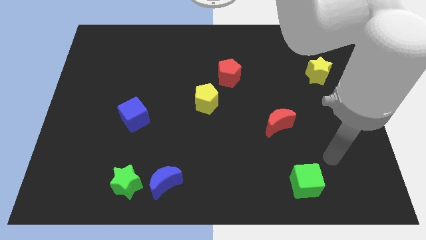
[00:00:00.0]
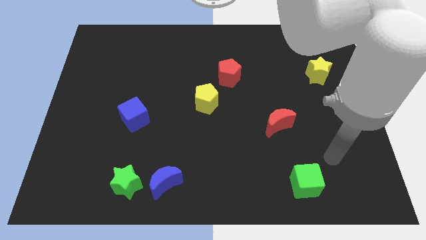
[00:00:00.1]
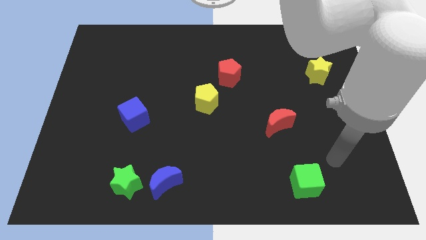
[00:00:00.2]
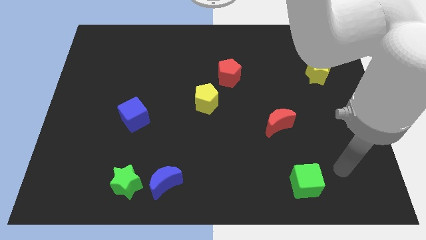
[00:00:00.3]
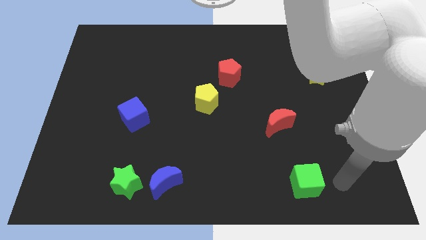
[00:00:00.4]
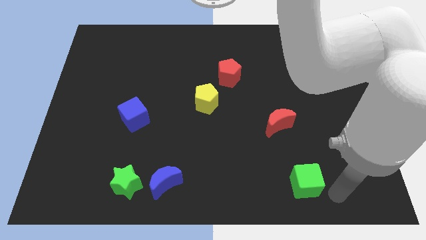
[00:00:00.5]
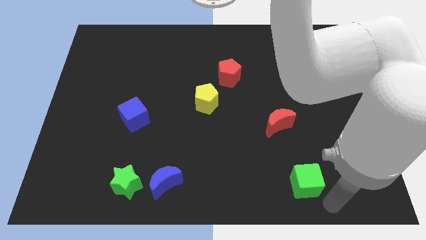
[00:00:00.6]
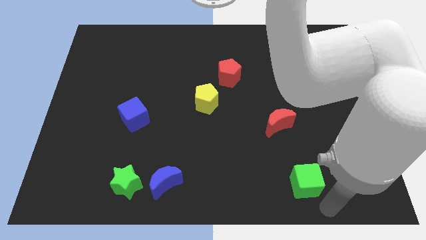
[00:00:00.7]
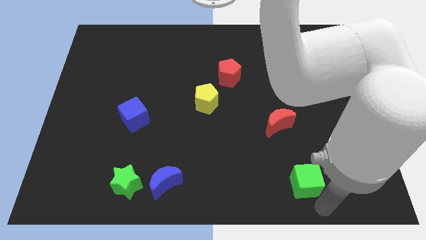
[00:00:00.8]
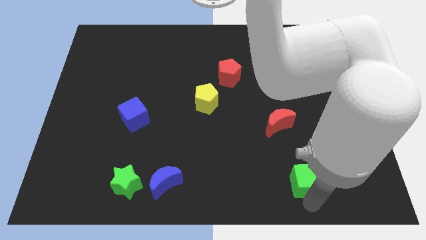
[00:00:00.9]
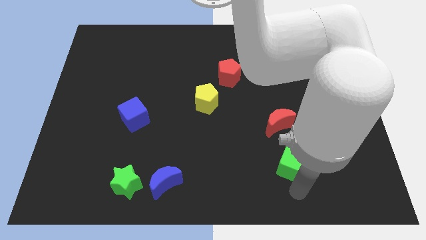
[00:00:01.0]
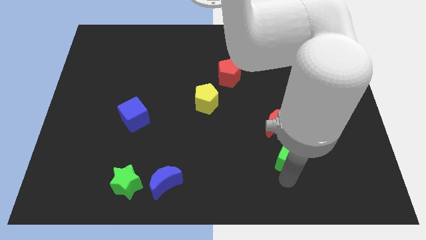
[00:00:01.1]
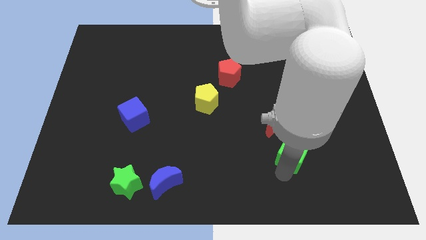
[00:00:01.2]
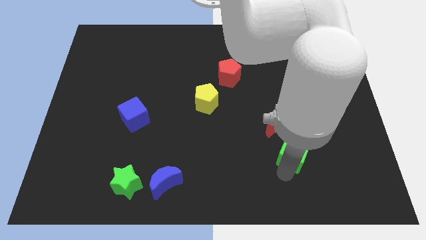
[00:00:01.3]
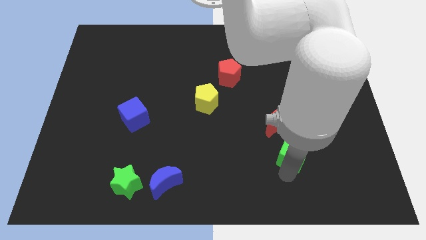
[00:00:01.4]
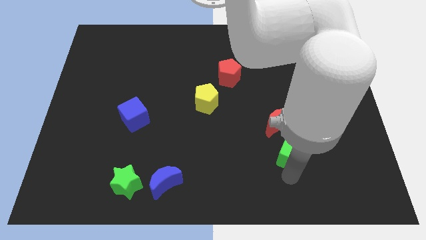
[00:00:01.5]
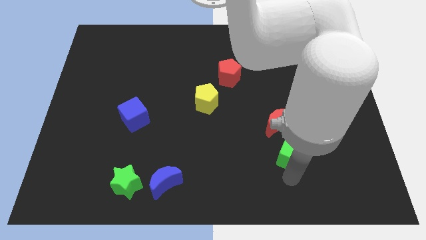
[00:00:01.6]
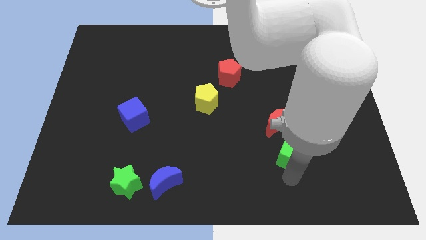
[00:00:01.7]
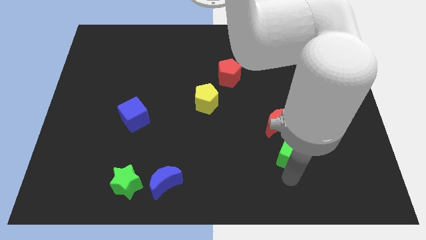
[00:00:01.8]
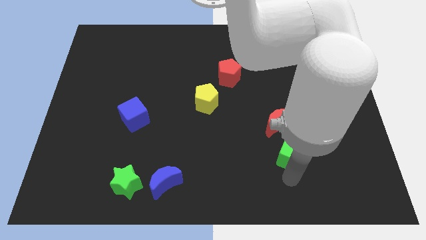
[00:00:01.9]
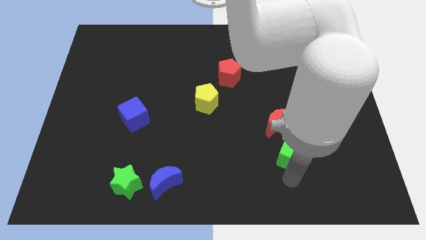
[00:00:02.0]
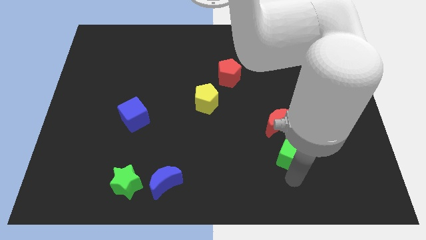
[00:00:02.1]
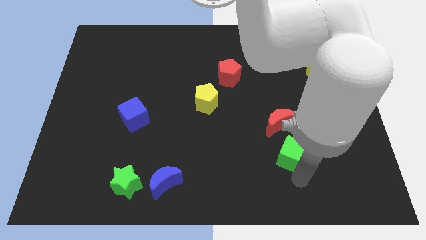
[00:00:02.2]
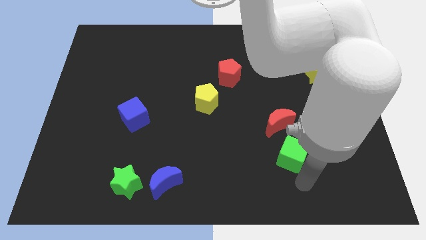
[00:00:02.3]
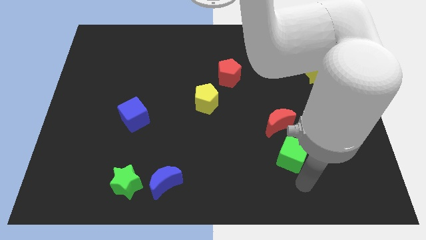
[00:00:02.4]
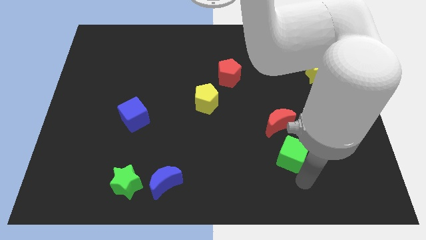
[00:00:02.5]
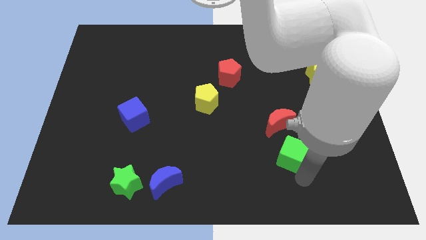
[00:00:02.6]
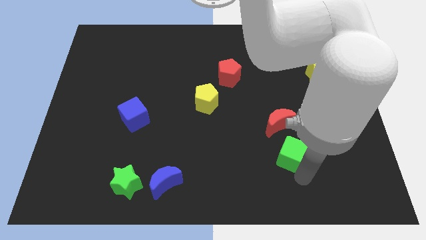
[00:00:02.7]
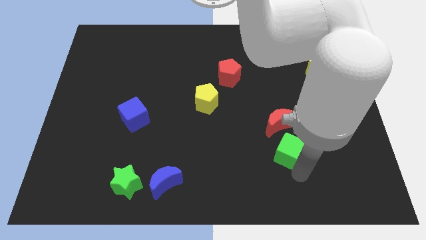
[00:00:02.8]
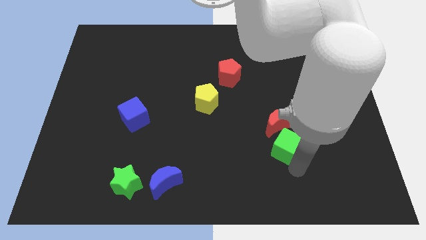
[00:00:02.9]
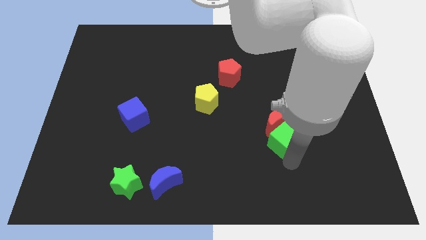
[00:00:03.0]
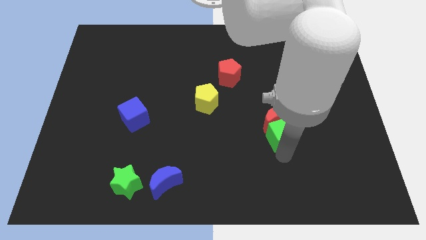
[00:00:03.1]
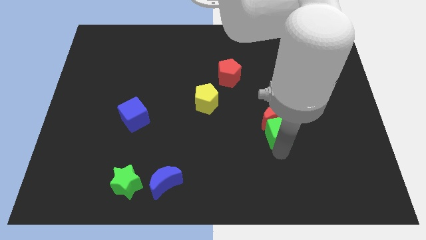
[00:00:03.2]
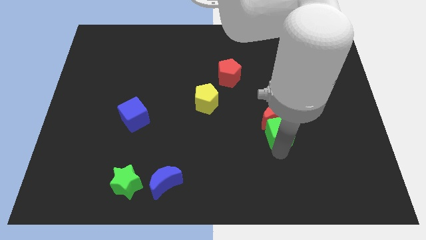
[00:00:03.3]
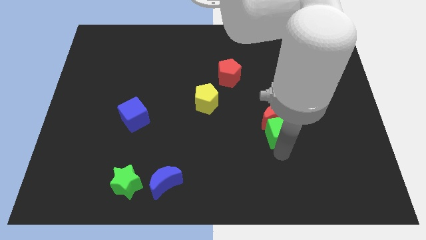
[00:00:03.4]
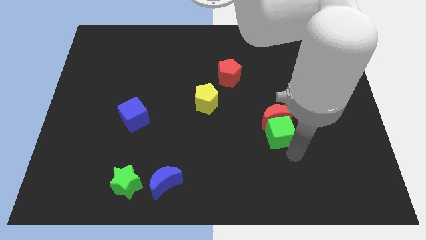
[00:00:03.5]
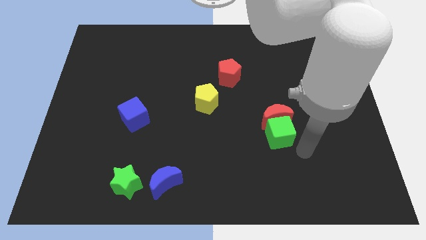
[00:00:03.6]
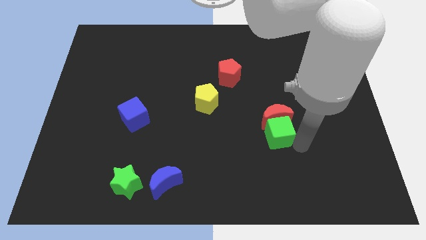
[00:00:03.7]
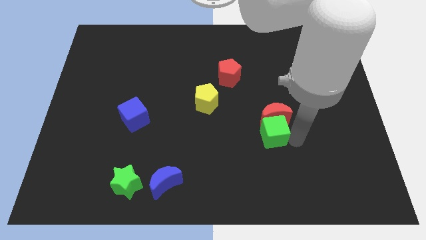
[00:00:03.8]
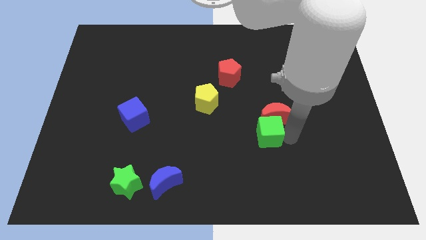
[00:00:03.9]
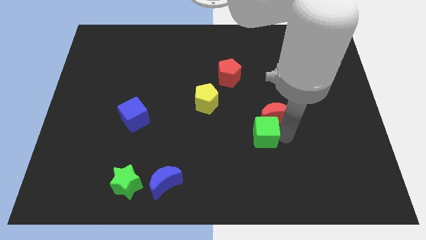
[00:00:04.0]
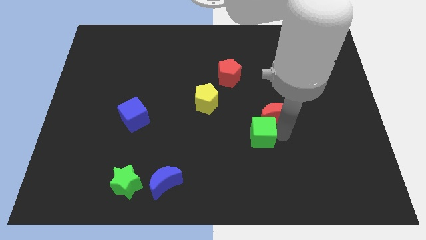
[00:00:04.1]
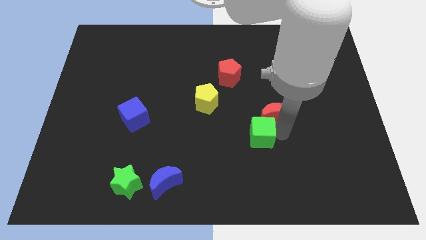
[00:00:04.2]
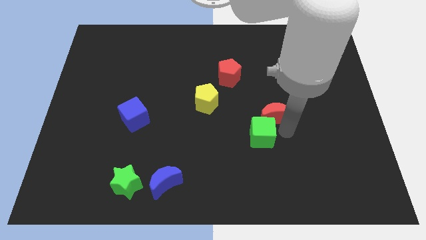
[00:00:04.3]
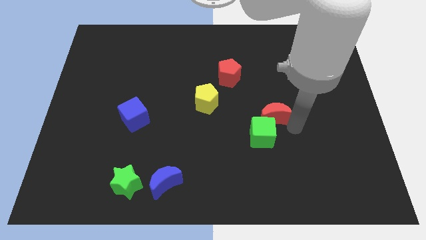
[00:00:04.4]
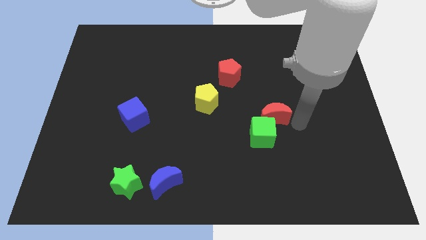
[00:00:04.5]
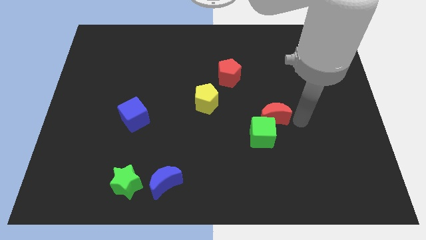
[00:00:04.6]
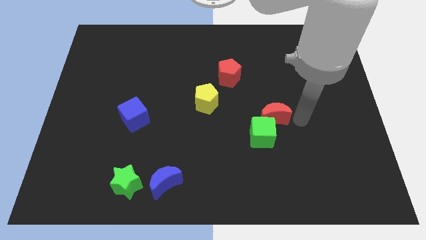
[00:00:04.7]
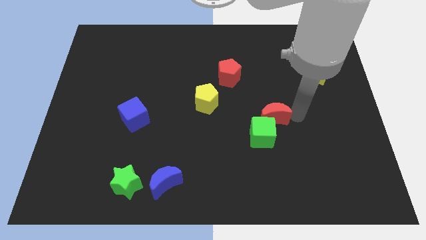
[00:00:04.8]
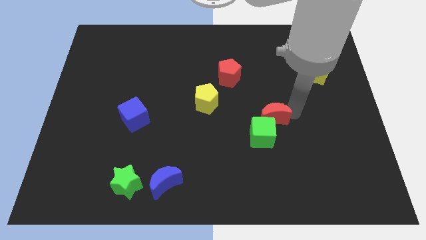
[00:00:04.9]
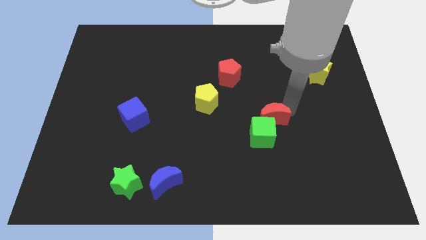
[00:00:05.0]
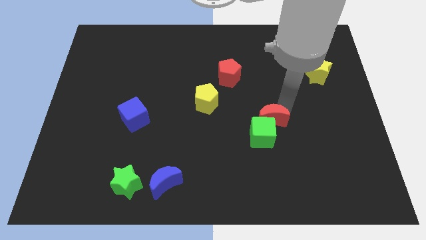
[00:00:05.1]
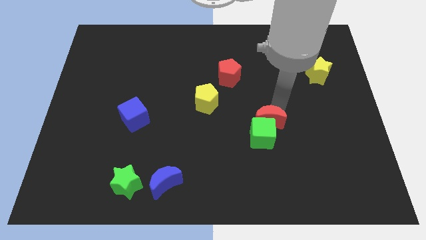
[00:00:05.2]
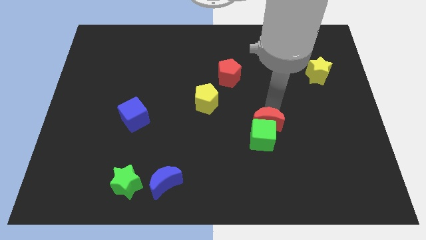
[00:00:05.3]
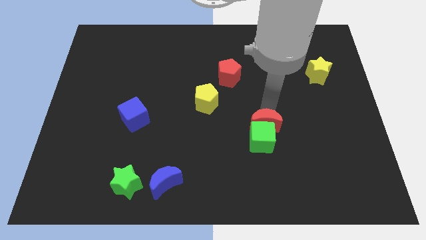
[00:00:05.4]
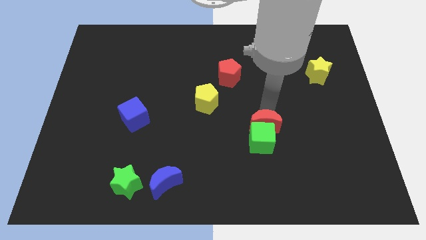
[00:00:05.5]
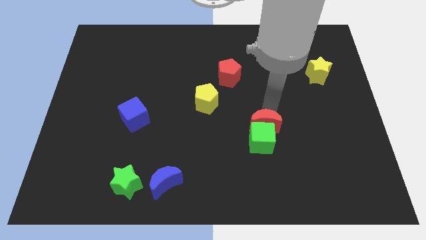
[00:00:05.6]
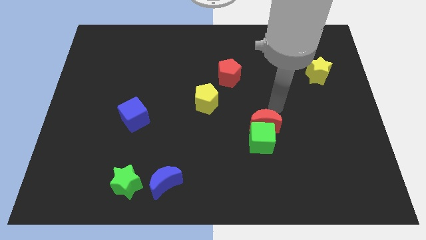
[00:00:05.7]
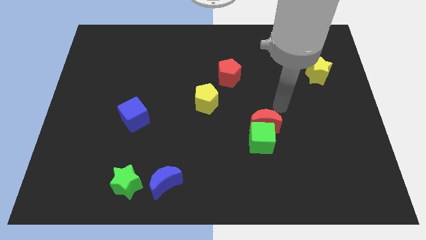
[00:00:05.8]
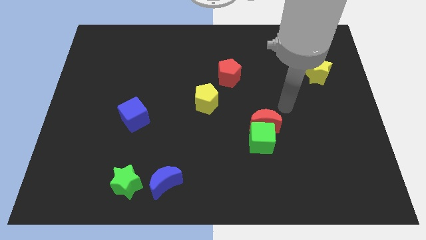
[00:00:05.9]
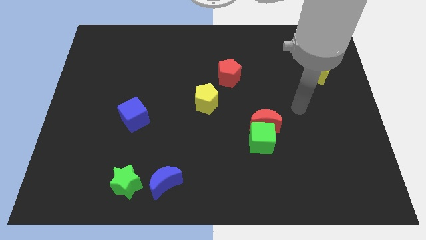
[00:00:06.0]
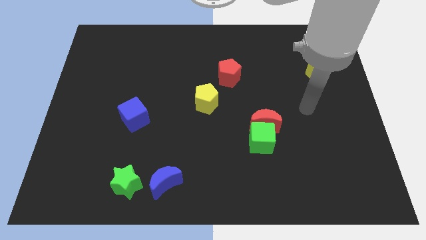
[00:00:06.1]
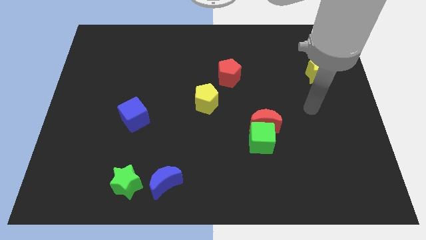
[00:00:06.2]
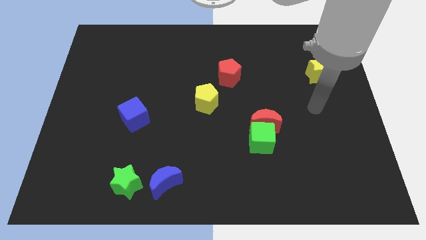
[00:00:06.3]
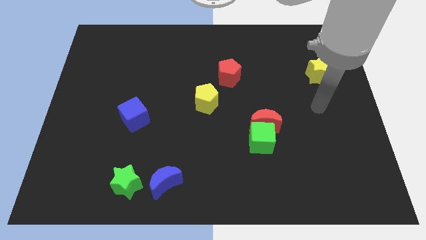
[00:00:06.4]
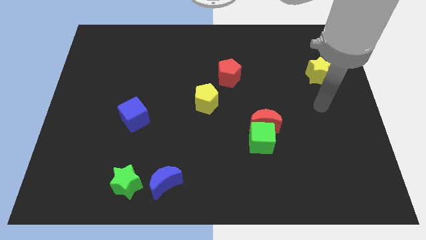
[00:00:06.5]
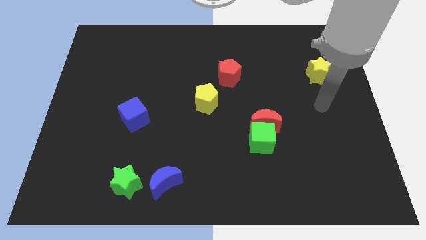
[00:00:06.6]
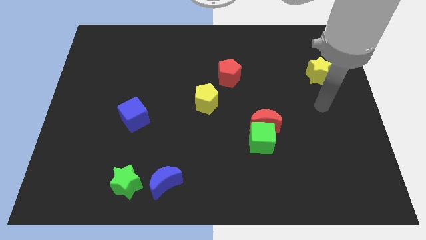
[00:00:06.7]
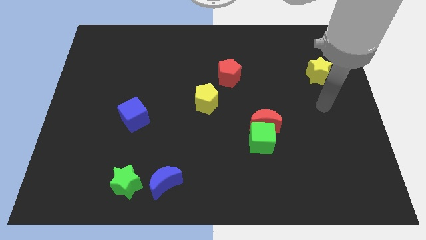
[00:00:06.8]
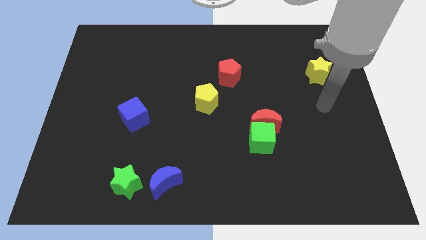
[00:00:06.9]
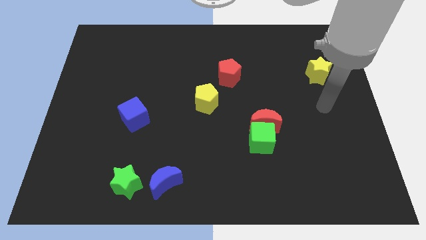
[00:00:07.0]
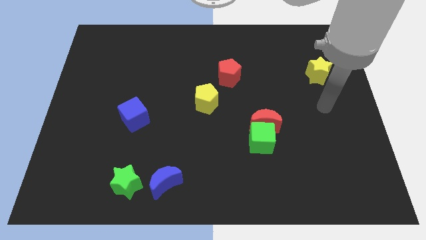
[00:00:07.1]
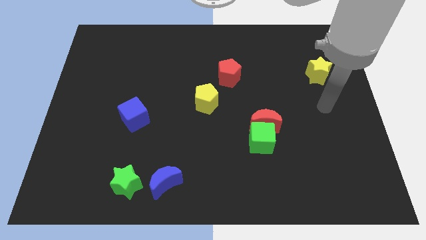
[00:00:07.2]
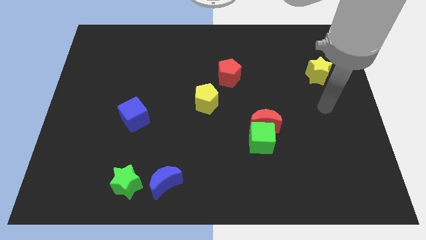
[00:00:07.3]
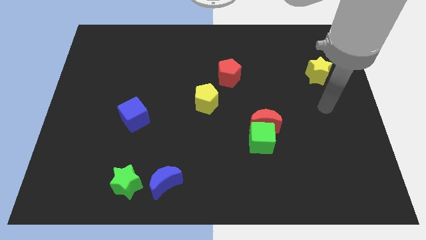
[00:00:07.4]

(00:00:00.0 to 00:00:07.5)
move the green cube above the red moon

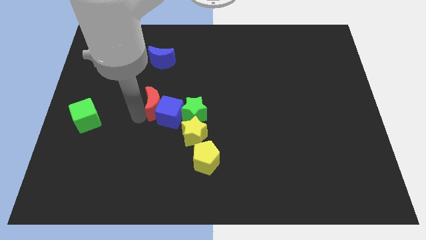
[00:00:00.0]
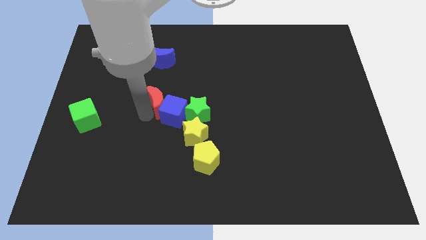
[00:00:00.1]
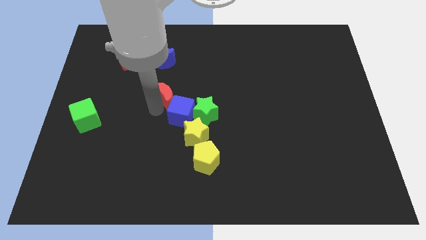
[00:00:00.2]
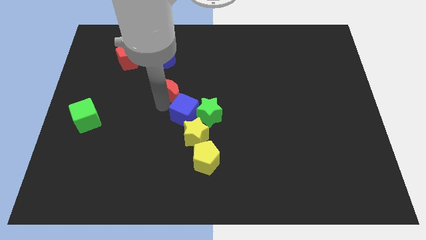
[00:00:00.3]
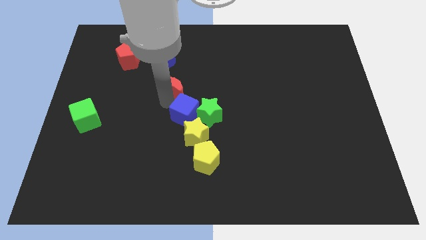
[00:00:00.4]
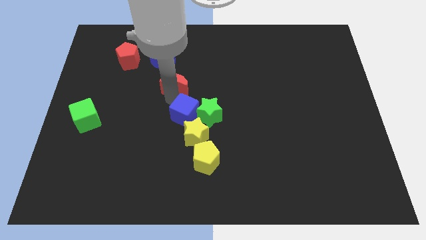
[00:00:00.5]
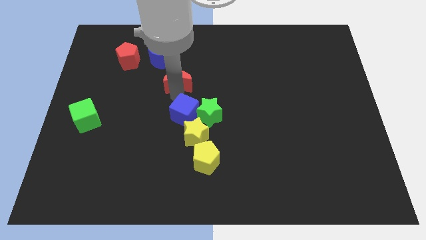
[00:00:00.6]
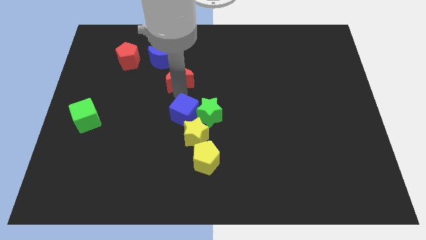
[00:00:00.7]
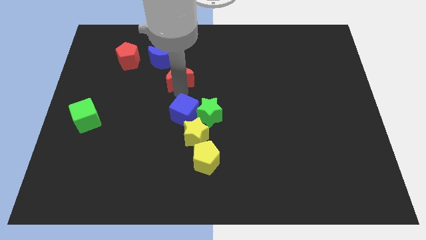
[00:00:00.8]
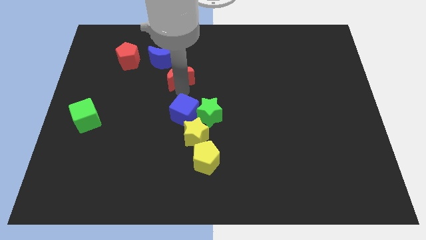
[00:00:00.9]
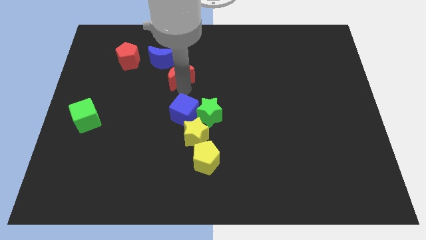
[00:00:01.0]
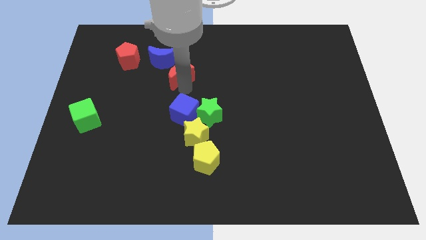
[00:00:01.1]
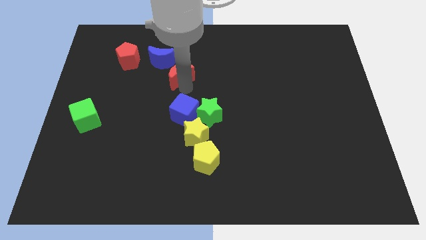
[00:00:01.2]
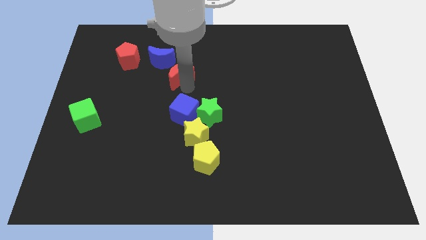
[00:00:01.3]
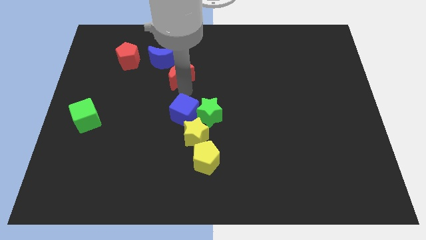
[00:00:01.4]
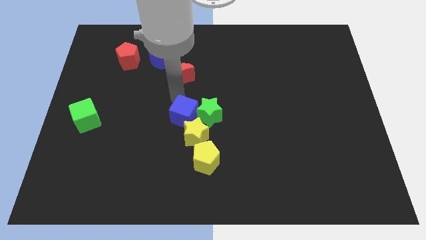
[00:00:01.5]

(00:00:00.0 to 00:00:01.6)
move the red moon to the top side of the blue cube

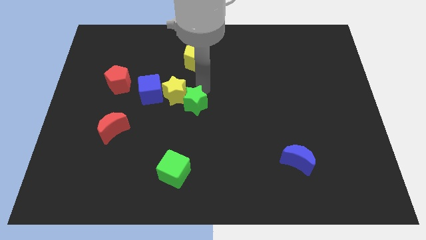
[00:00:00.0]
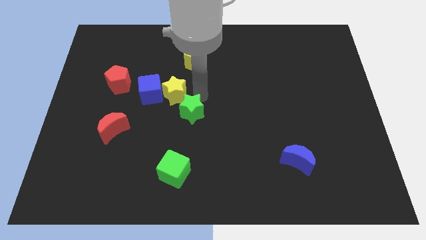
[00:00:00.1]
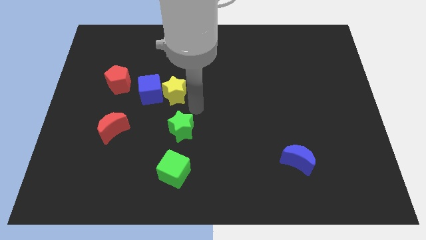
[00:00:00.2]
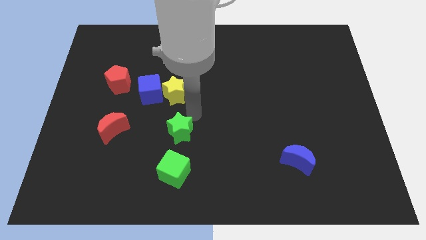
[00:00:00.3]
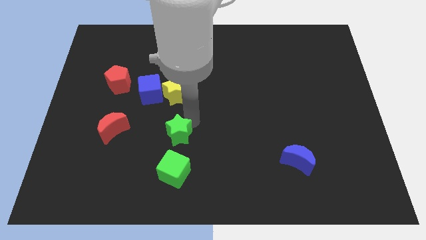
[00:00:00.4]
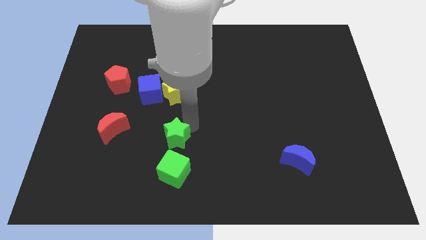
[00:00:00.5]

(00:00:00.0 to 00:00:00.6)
move green star towards green cube
